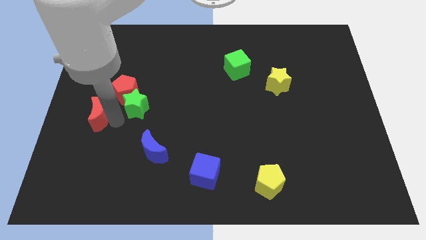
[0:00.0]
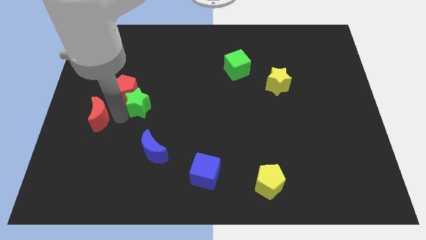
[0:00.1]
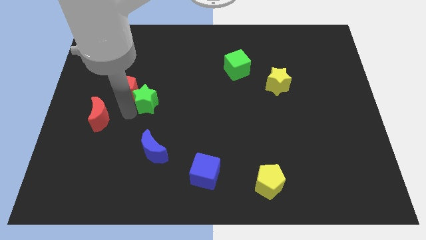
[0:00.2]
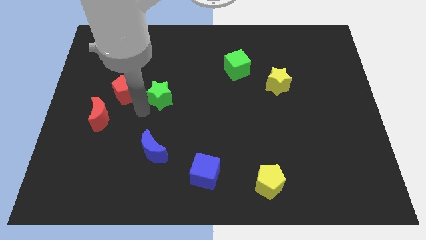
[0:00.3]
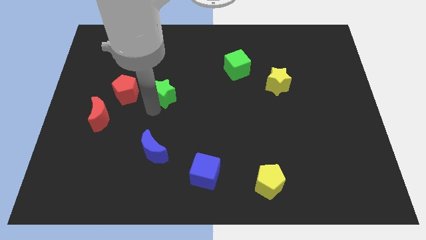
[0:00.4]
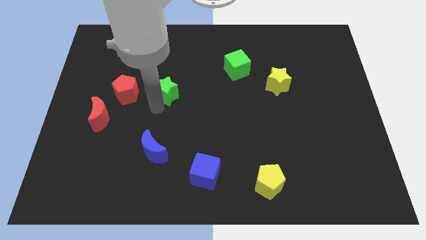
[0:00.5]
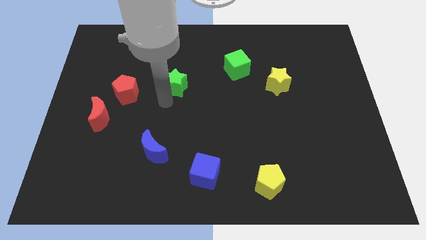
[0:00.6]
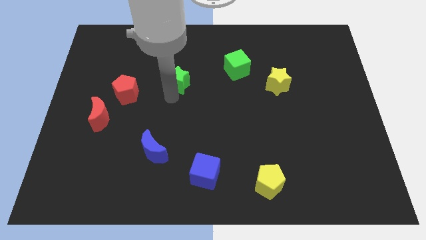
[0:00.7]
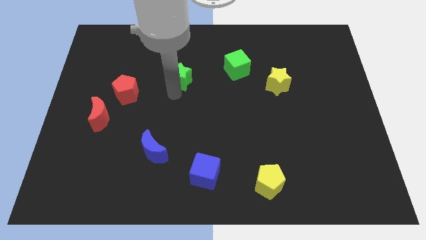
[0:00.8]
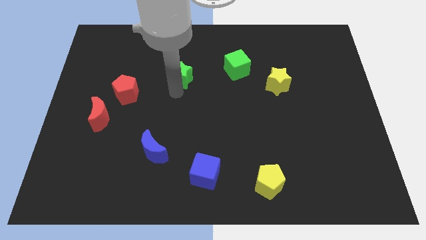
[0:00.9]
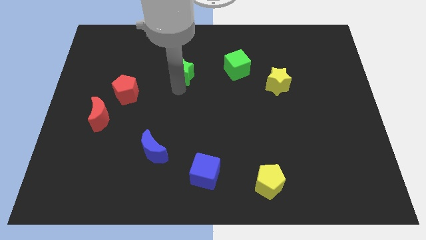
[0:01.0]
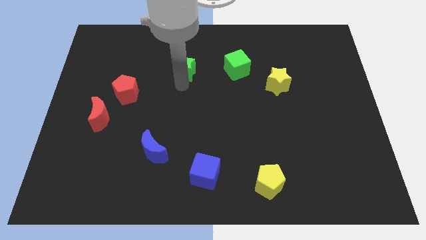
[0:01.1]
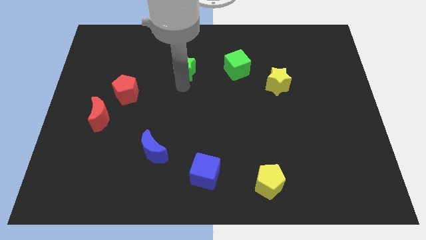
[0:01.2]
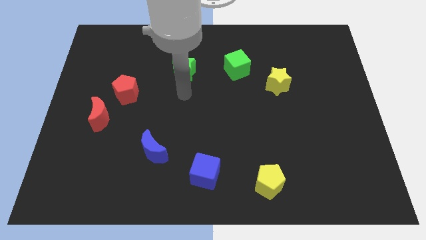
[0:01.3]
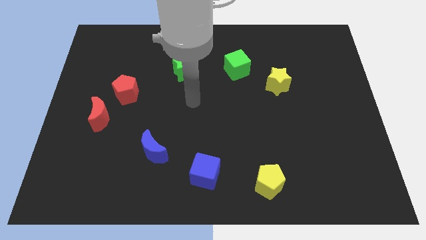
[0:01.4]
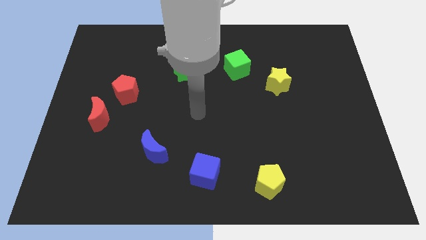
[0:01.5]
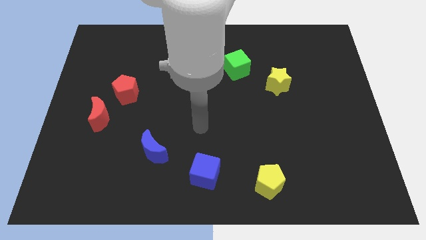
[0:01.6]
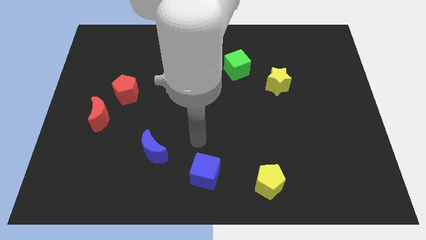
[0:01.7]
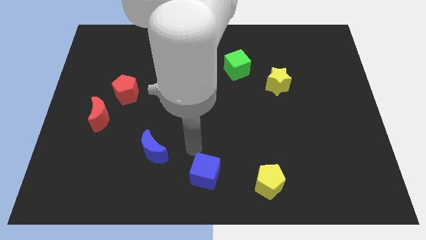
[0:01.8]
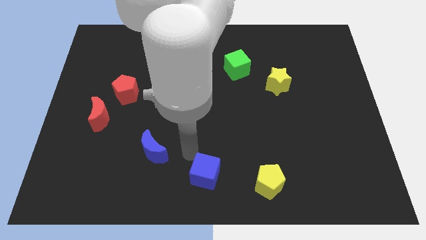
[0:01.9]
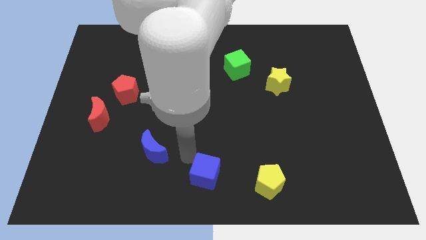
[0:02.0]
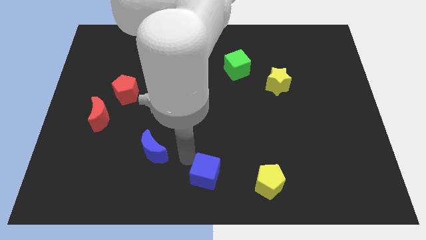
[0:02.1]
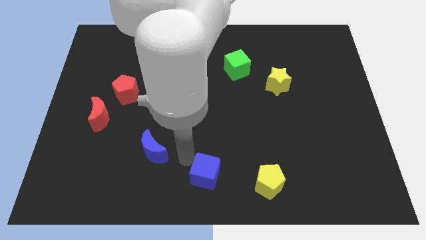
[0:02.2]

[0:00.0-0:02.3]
place the green star to the left of the green cube

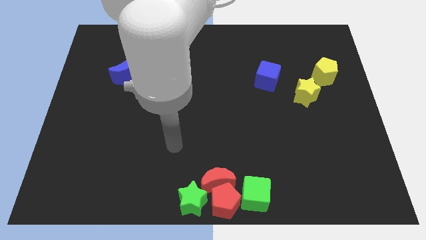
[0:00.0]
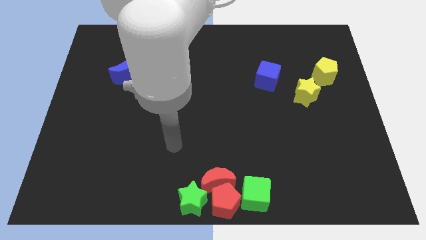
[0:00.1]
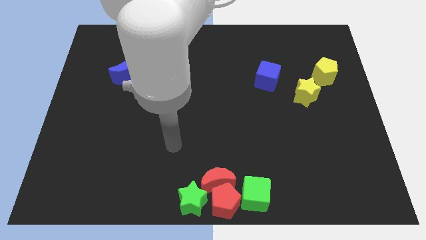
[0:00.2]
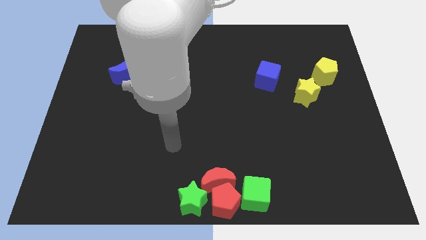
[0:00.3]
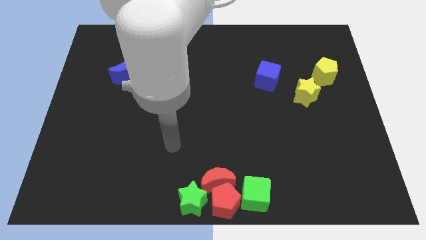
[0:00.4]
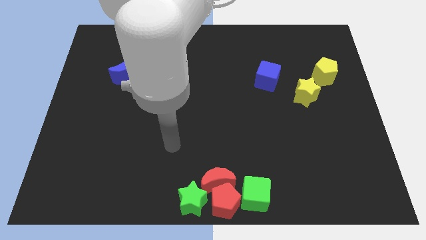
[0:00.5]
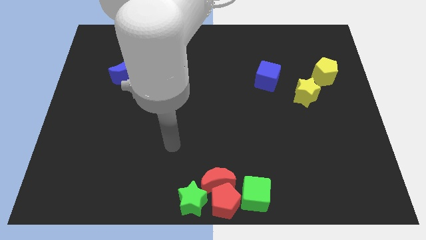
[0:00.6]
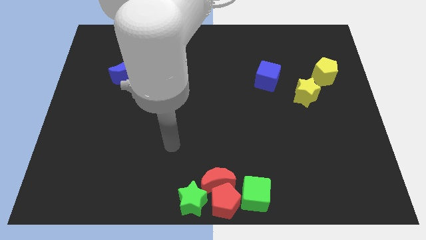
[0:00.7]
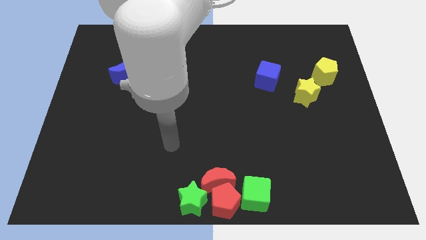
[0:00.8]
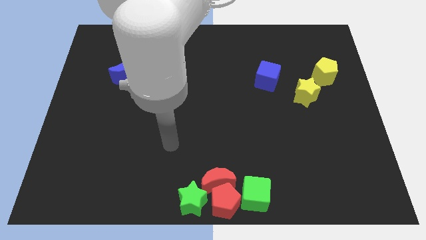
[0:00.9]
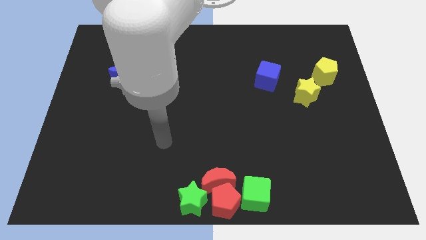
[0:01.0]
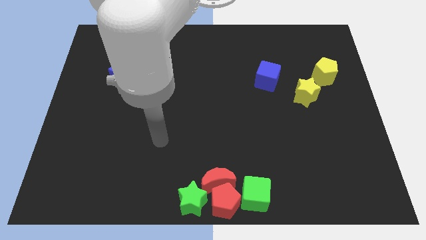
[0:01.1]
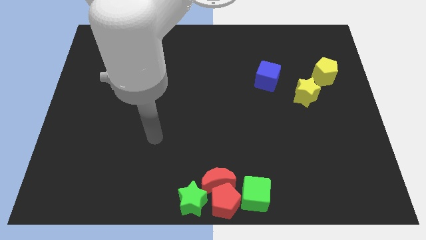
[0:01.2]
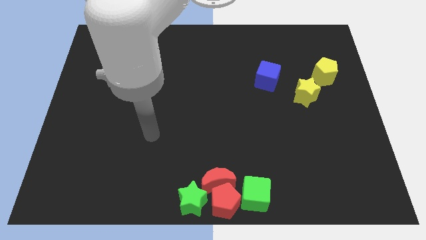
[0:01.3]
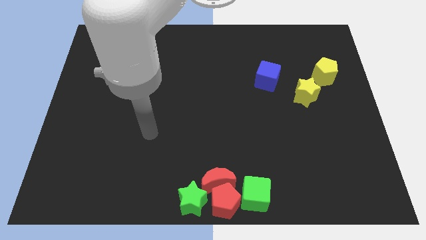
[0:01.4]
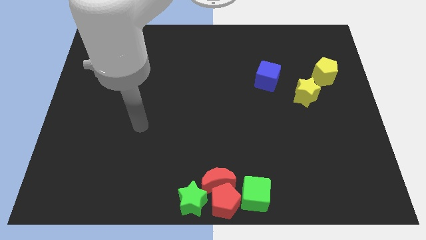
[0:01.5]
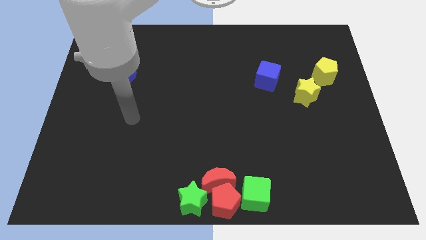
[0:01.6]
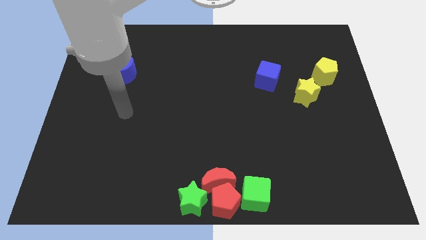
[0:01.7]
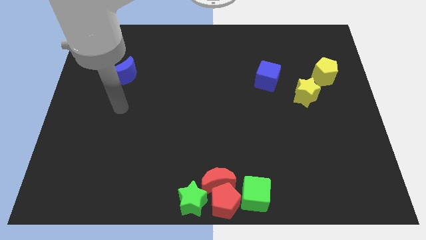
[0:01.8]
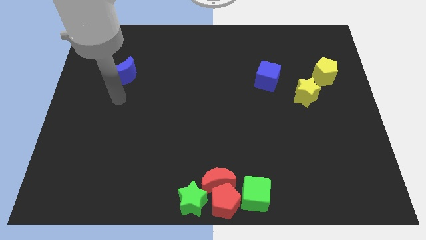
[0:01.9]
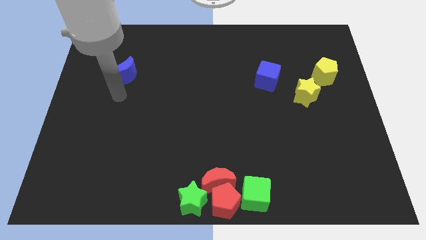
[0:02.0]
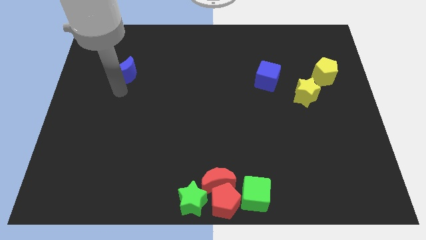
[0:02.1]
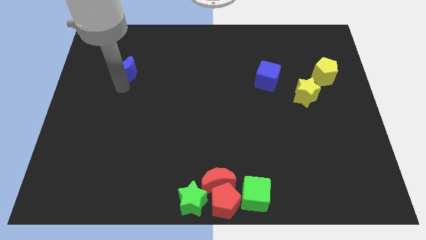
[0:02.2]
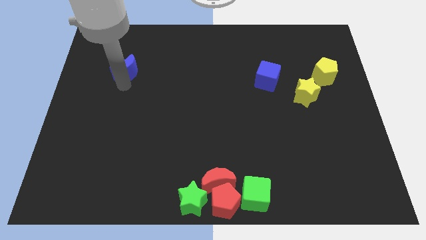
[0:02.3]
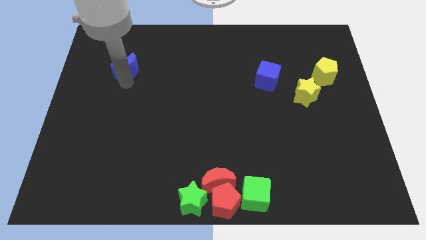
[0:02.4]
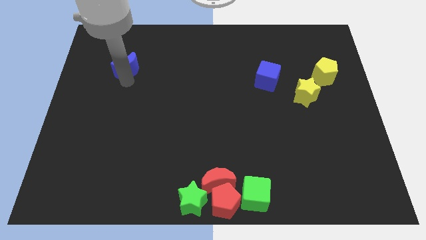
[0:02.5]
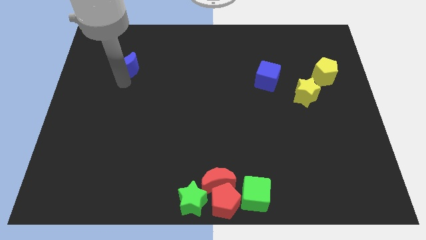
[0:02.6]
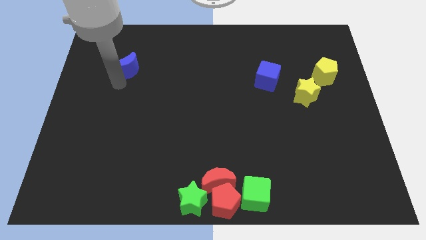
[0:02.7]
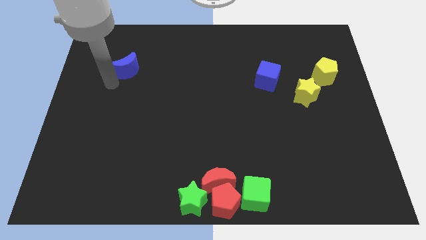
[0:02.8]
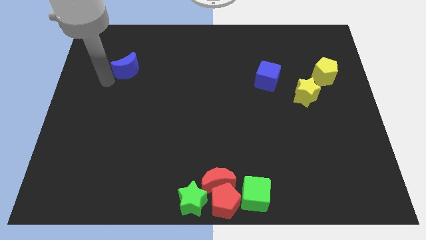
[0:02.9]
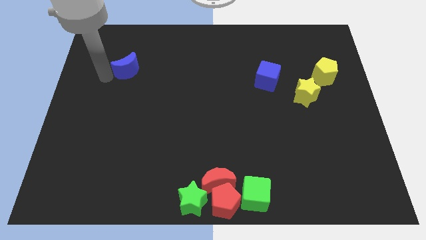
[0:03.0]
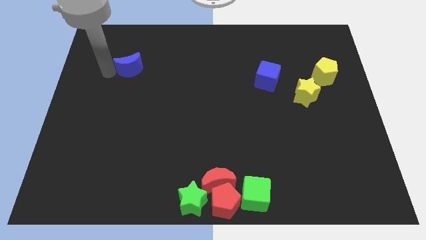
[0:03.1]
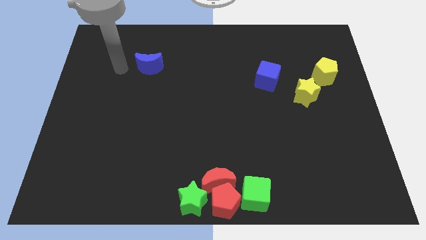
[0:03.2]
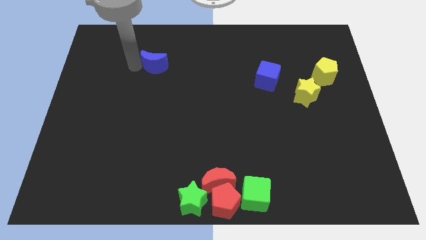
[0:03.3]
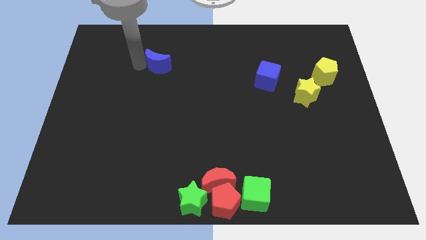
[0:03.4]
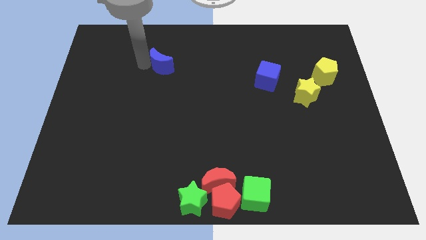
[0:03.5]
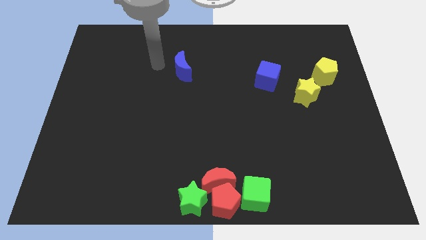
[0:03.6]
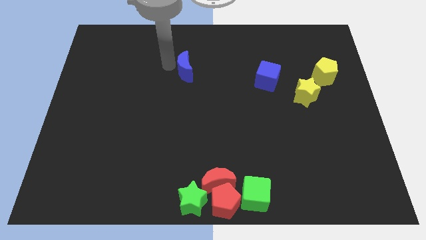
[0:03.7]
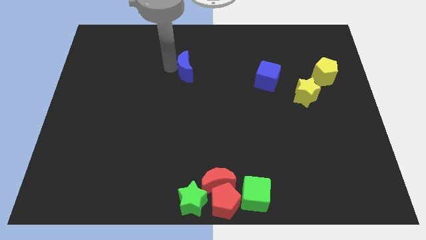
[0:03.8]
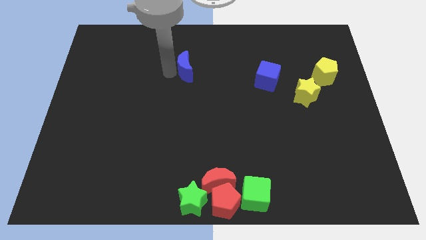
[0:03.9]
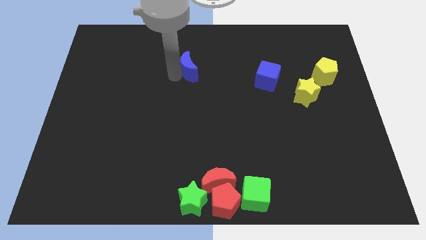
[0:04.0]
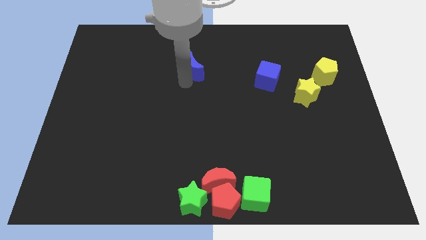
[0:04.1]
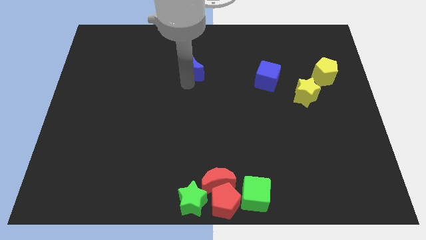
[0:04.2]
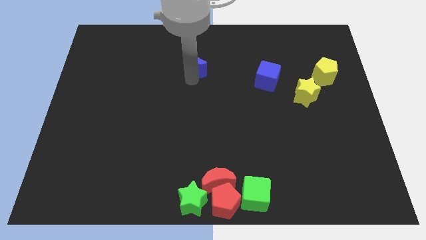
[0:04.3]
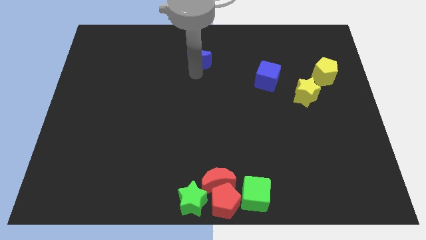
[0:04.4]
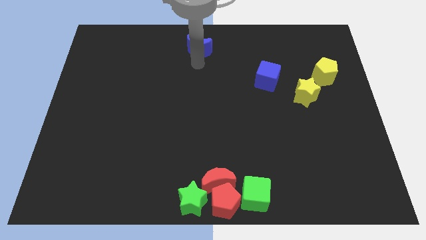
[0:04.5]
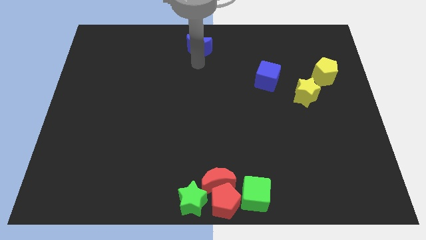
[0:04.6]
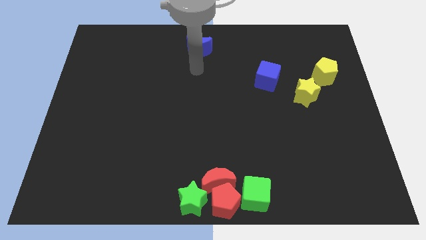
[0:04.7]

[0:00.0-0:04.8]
push the blue crescent to the top center of the board

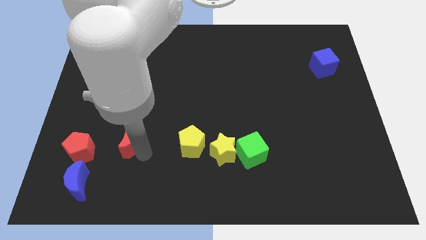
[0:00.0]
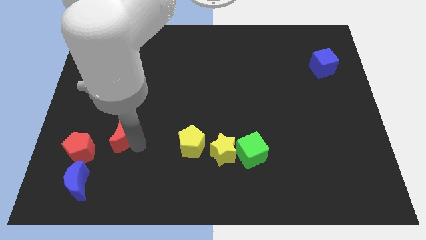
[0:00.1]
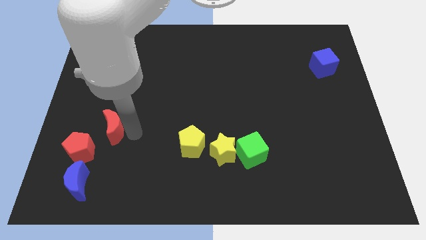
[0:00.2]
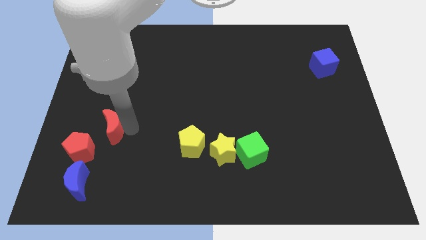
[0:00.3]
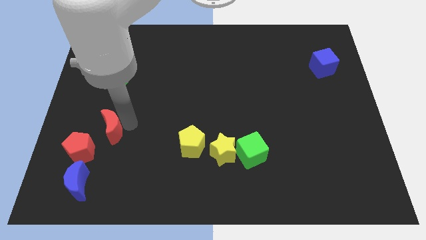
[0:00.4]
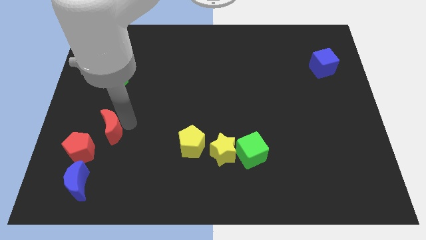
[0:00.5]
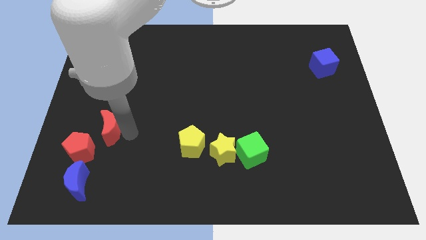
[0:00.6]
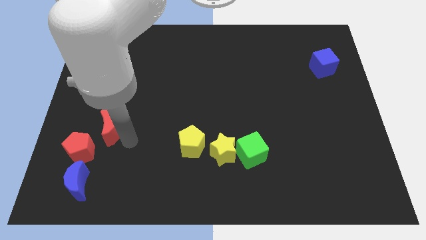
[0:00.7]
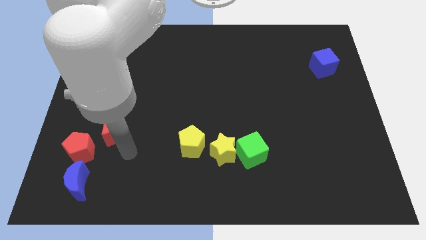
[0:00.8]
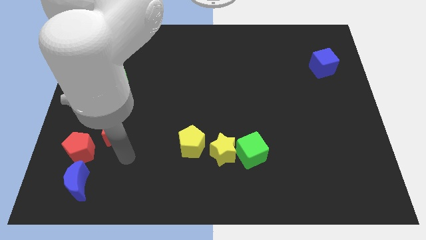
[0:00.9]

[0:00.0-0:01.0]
push red moon towards red pentagon

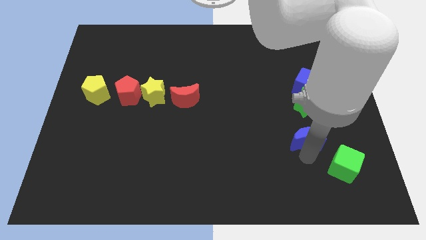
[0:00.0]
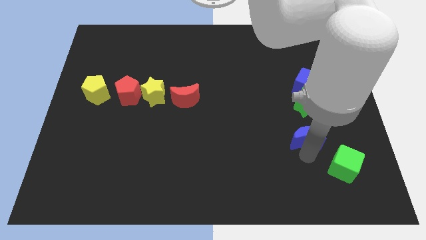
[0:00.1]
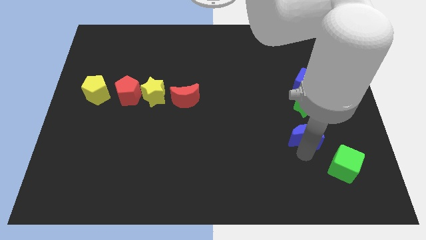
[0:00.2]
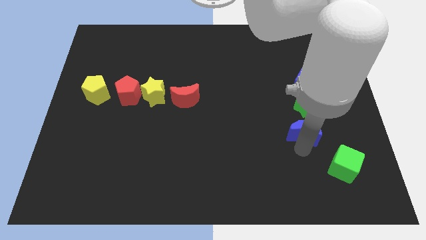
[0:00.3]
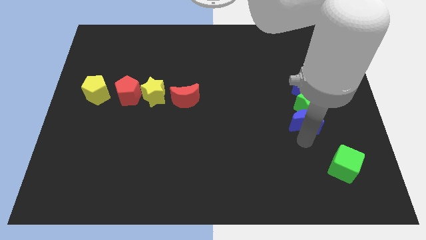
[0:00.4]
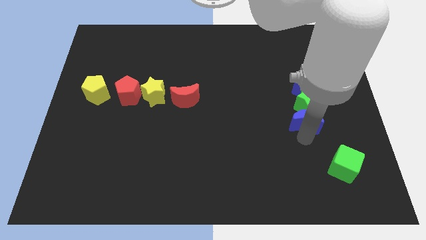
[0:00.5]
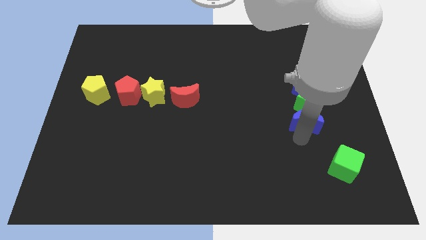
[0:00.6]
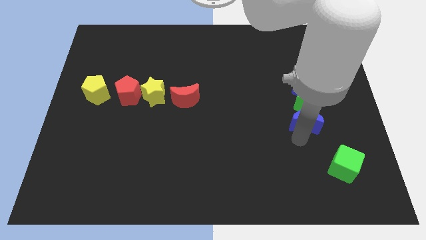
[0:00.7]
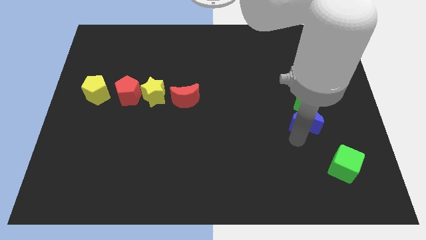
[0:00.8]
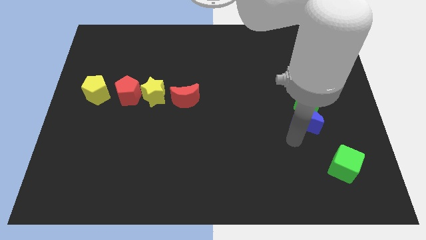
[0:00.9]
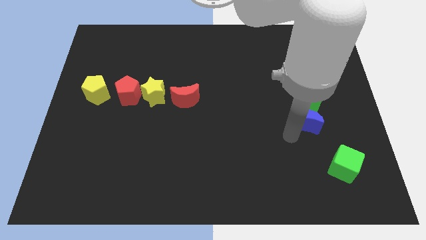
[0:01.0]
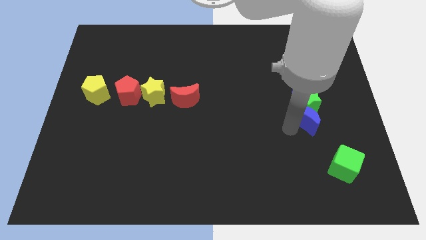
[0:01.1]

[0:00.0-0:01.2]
push the blue crescent close to the green star
